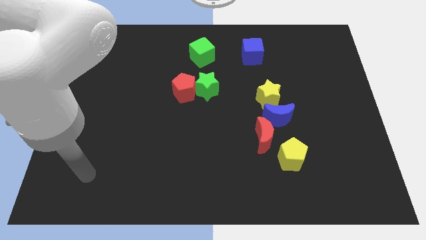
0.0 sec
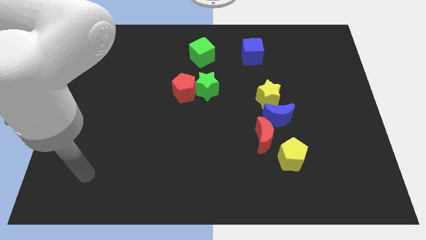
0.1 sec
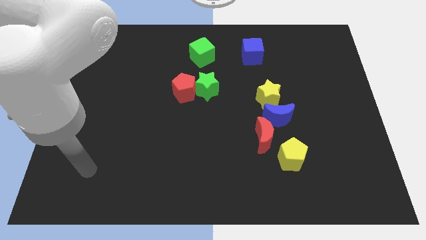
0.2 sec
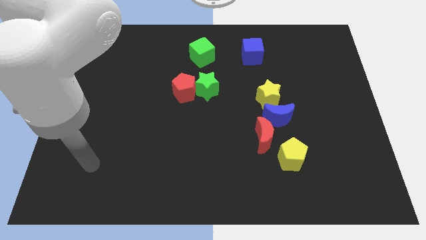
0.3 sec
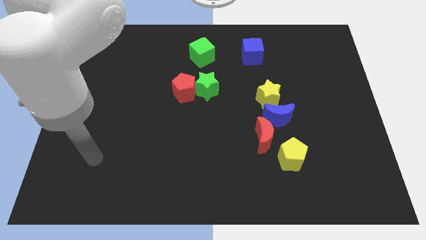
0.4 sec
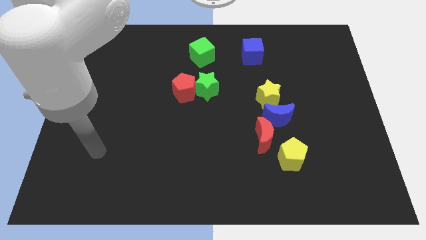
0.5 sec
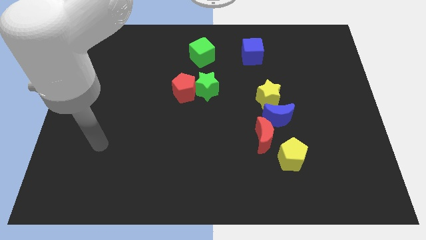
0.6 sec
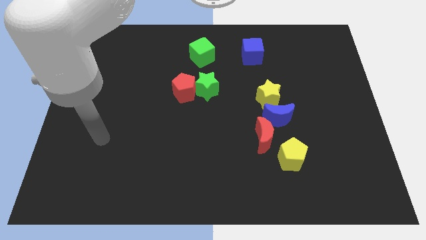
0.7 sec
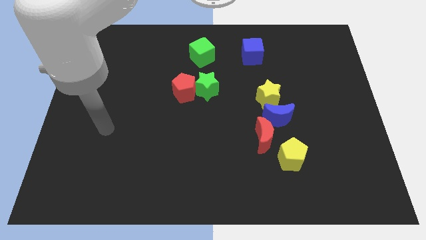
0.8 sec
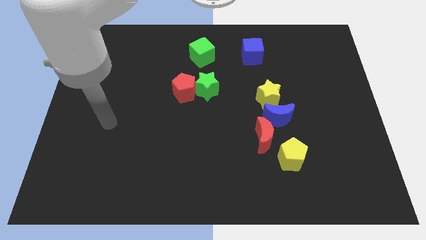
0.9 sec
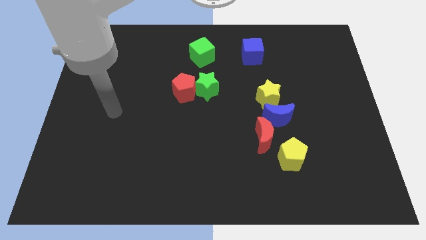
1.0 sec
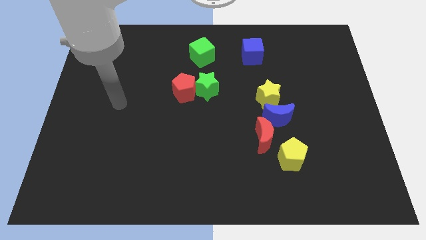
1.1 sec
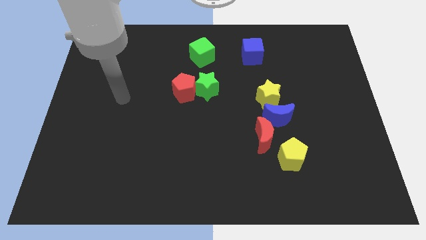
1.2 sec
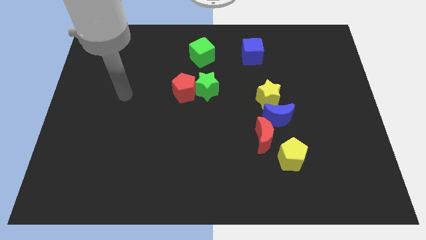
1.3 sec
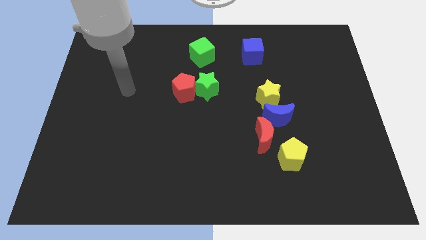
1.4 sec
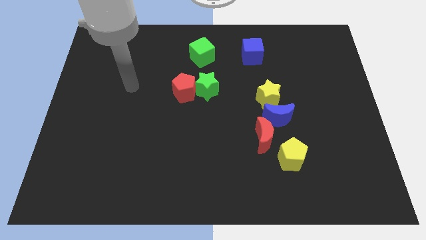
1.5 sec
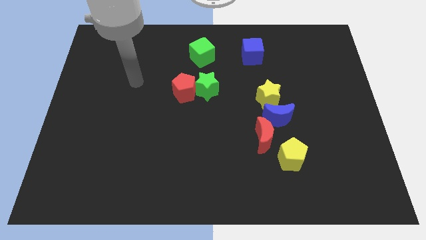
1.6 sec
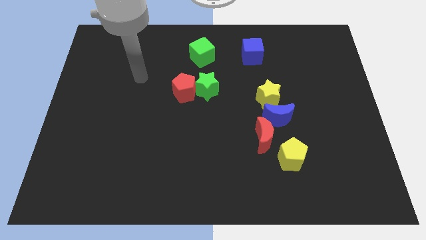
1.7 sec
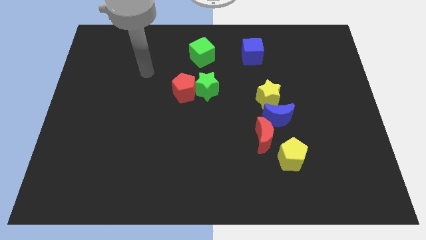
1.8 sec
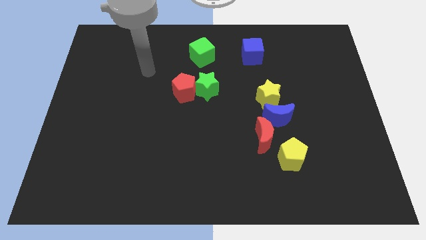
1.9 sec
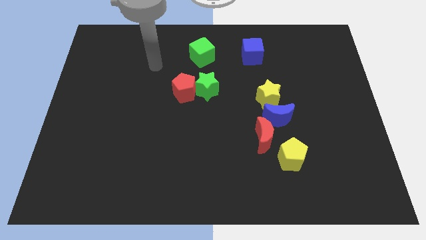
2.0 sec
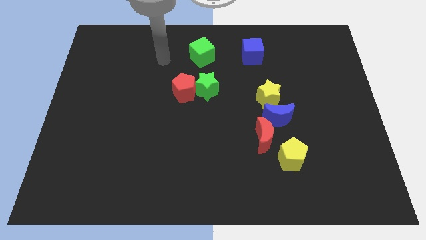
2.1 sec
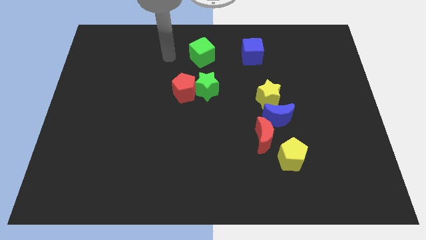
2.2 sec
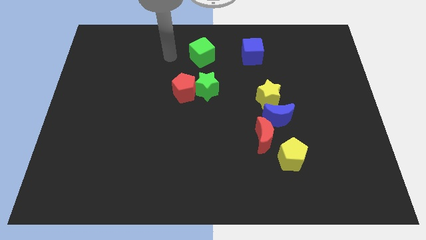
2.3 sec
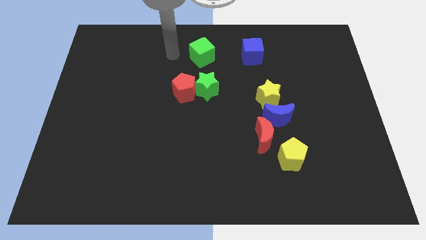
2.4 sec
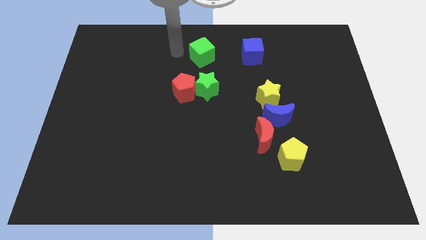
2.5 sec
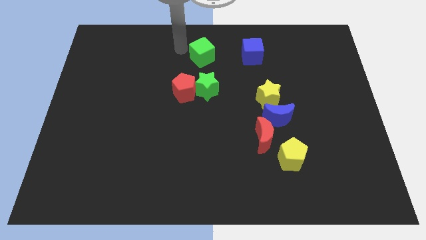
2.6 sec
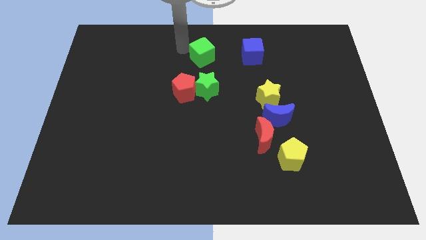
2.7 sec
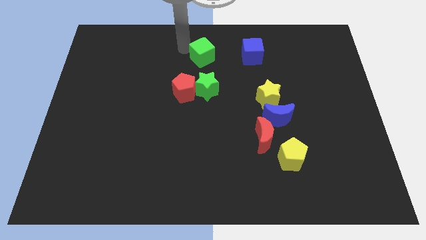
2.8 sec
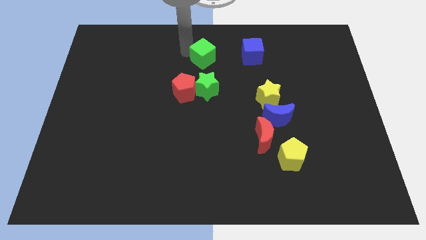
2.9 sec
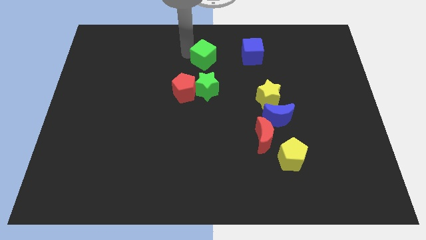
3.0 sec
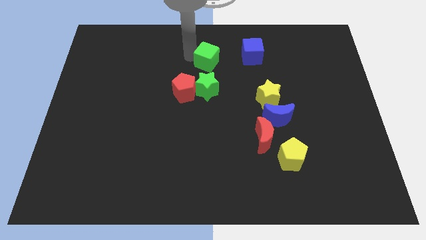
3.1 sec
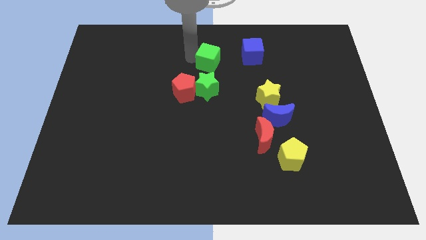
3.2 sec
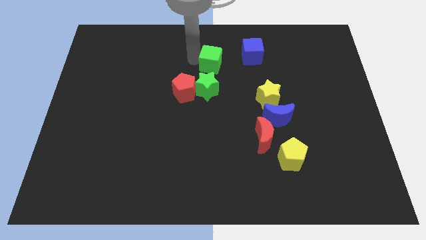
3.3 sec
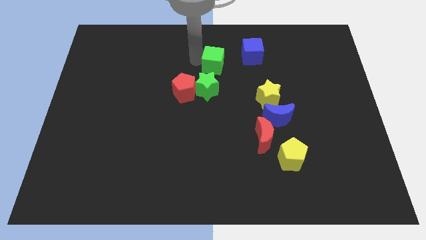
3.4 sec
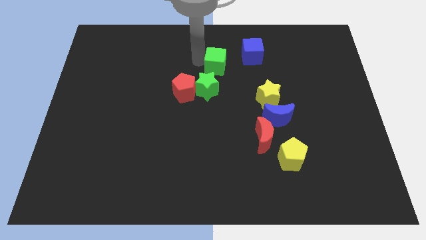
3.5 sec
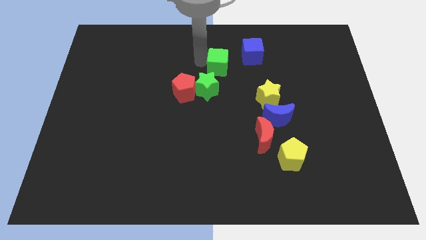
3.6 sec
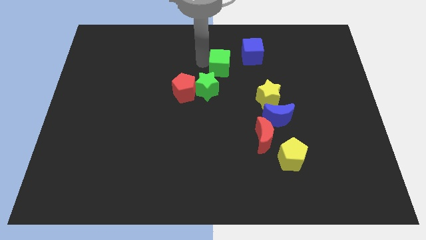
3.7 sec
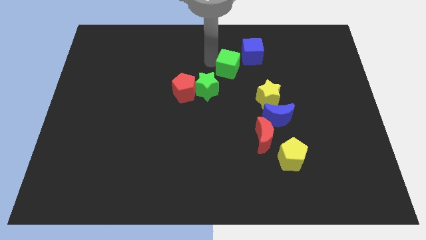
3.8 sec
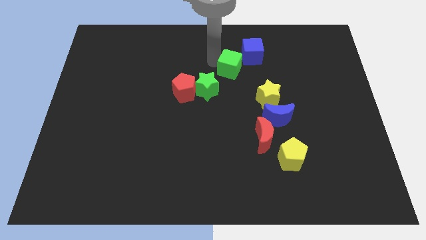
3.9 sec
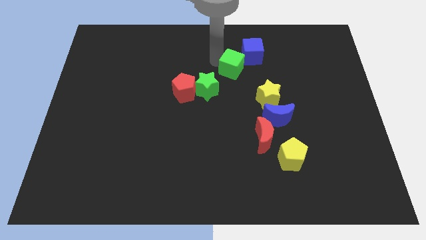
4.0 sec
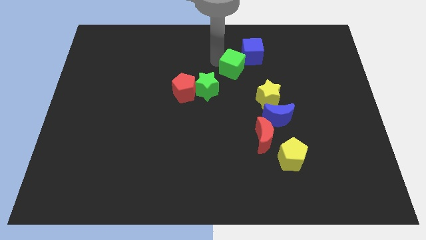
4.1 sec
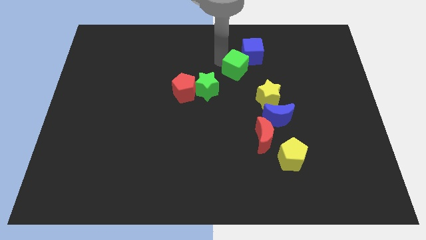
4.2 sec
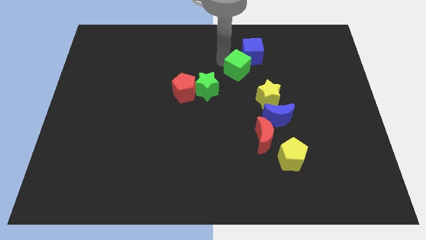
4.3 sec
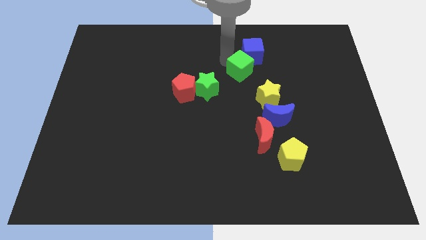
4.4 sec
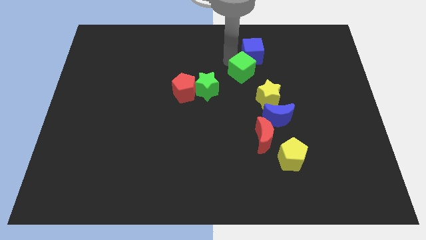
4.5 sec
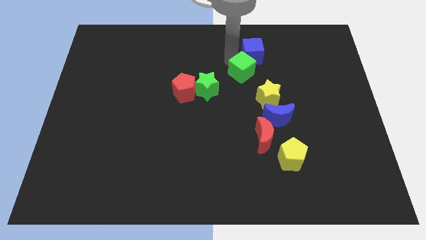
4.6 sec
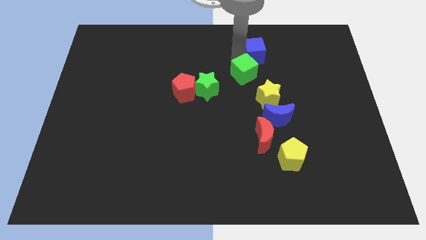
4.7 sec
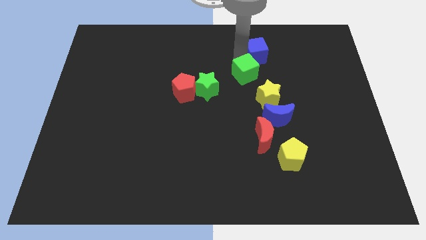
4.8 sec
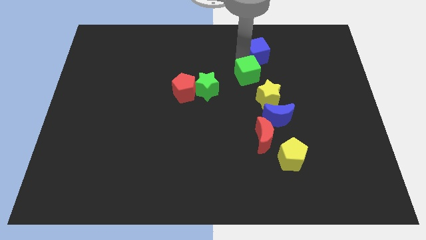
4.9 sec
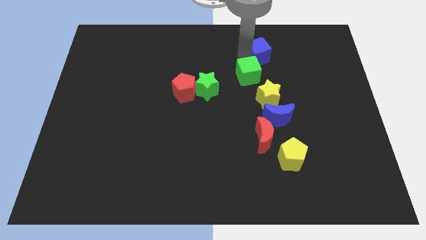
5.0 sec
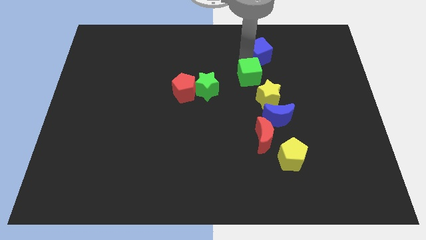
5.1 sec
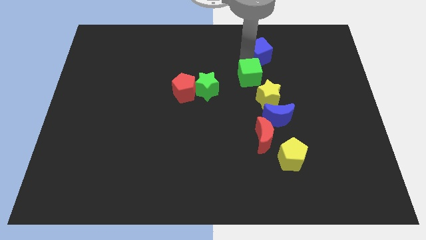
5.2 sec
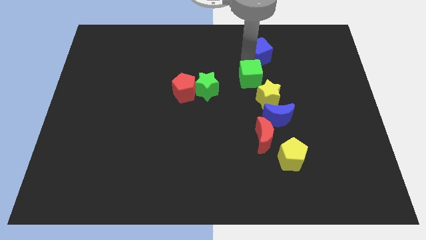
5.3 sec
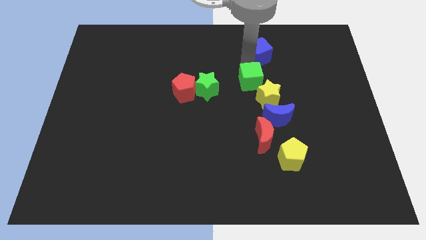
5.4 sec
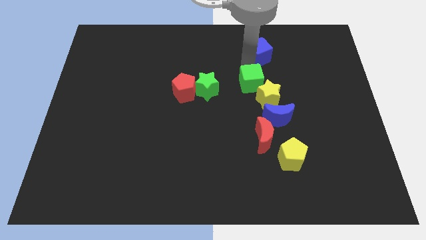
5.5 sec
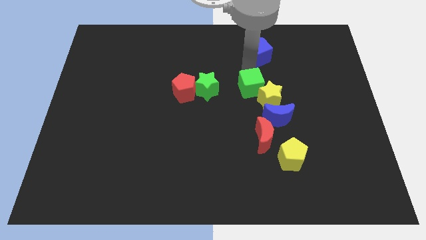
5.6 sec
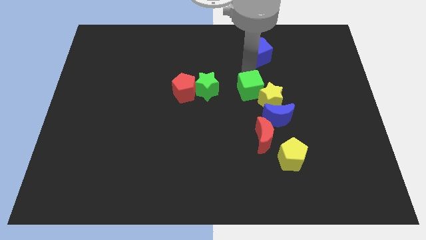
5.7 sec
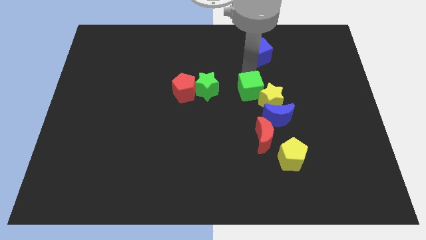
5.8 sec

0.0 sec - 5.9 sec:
move the green cube next to the yellow star

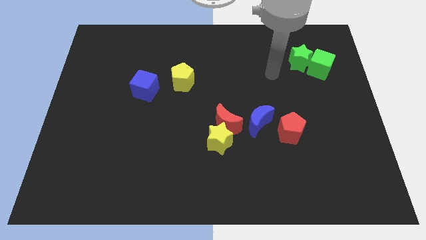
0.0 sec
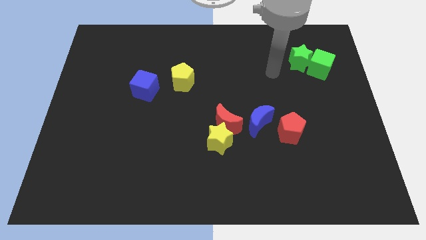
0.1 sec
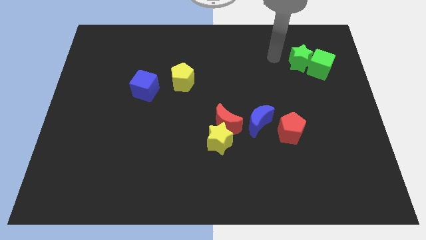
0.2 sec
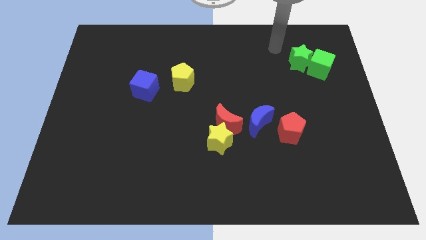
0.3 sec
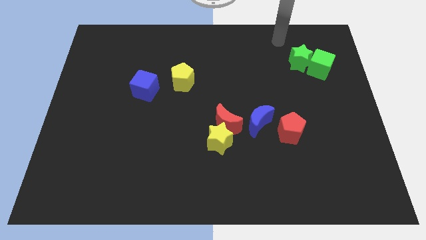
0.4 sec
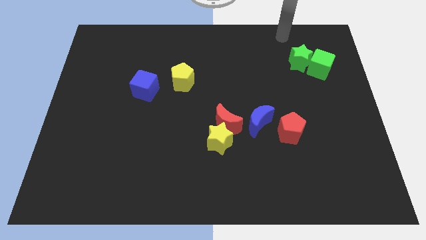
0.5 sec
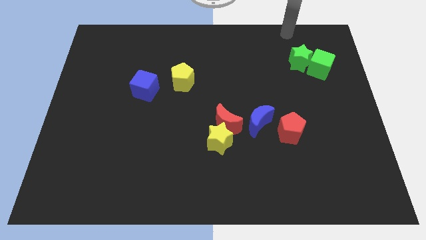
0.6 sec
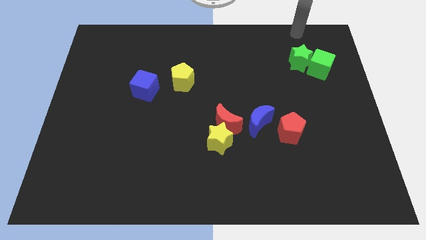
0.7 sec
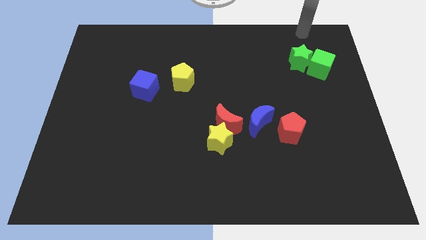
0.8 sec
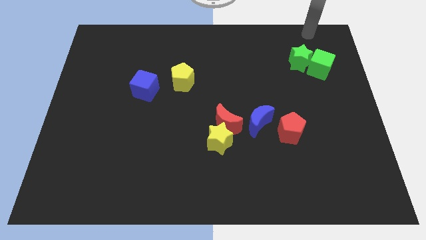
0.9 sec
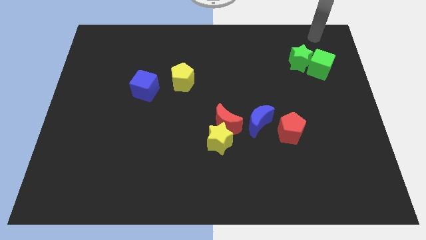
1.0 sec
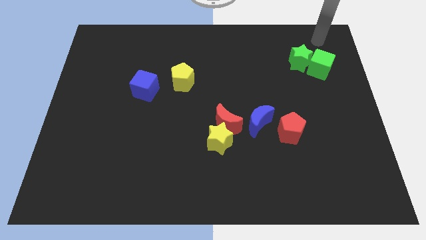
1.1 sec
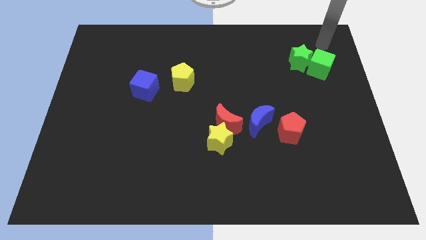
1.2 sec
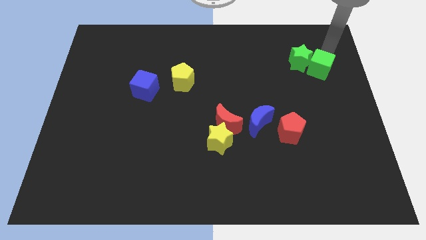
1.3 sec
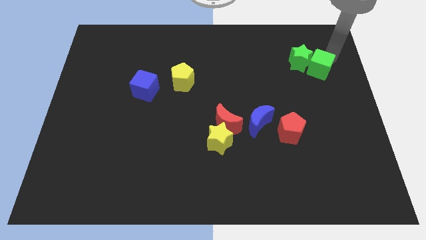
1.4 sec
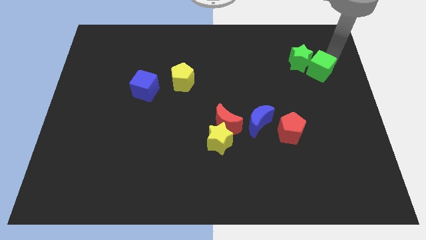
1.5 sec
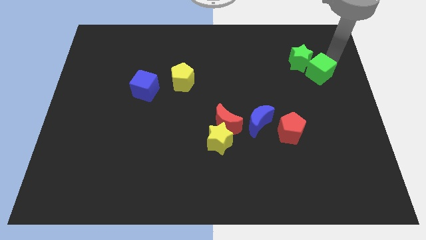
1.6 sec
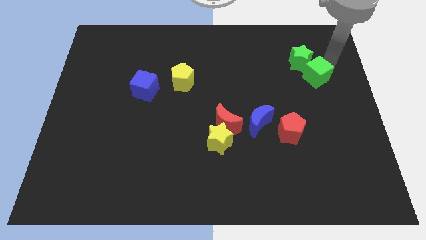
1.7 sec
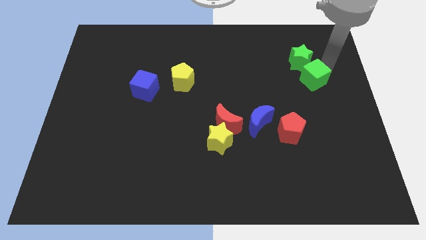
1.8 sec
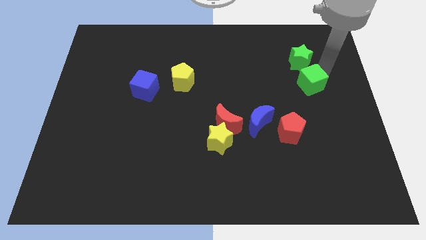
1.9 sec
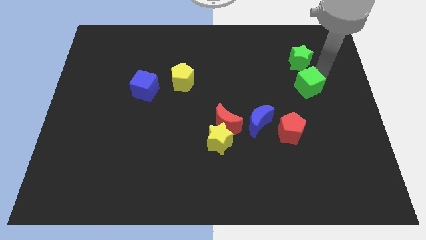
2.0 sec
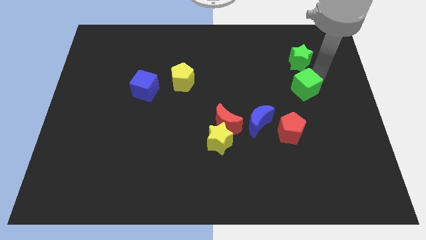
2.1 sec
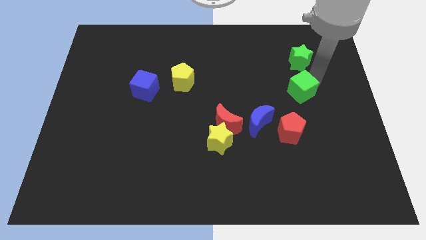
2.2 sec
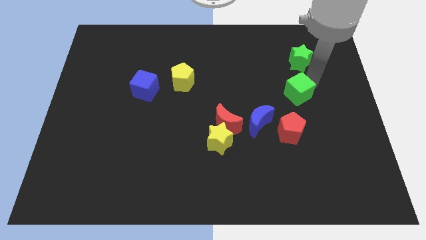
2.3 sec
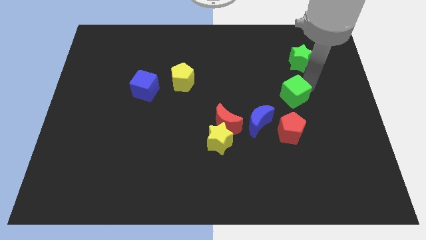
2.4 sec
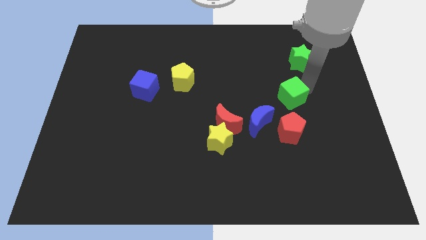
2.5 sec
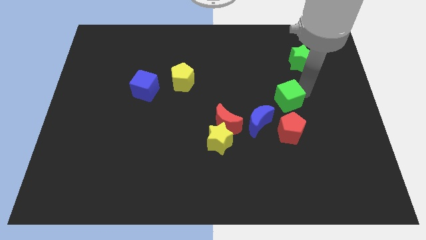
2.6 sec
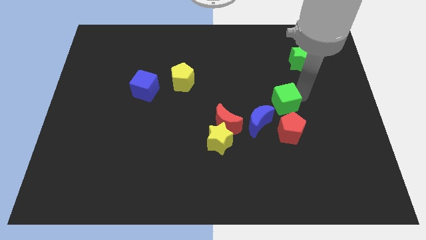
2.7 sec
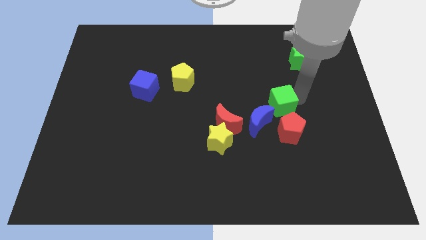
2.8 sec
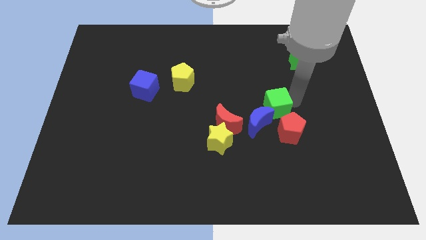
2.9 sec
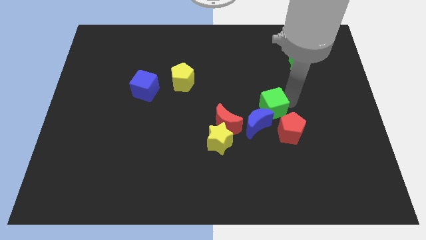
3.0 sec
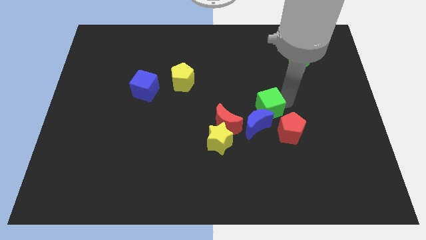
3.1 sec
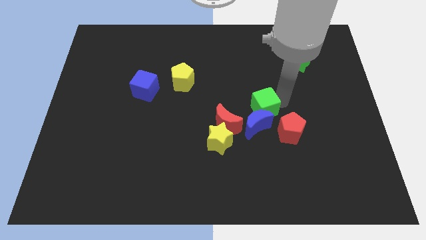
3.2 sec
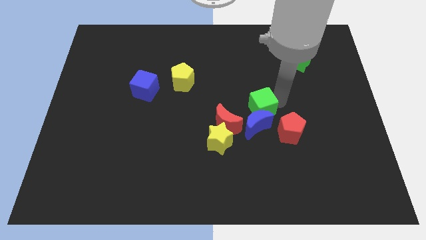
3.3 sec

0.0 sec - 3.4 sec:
push the green cube towards the blue moon
